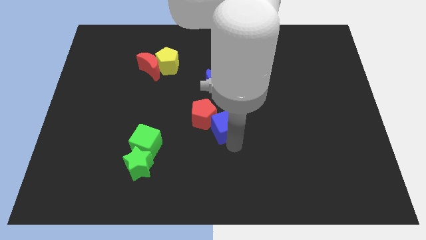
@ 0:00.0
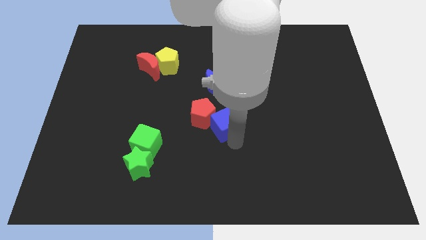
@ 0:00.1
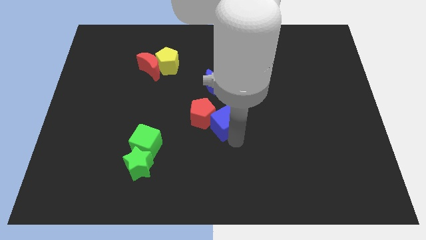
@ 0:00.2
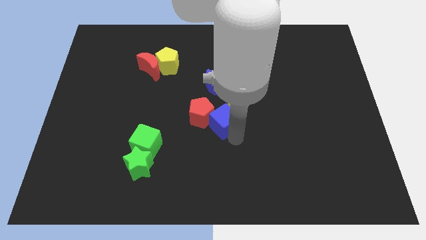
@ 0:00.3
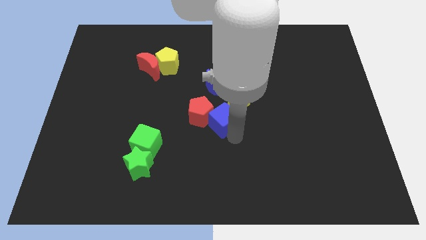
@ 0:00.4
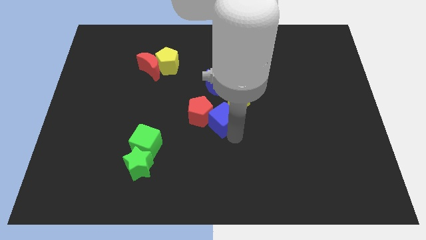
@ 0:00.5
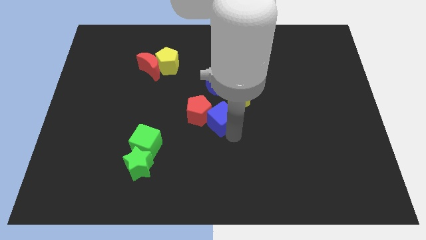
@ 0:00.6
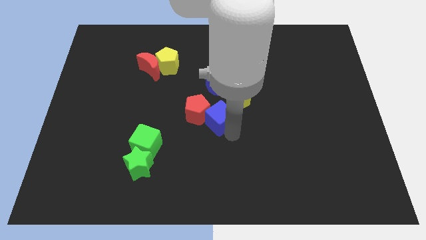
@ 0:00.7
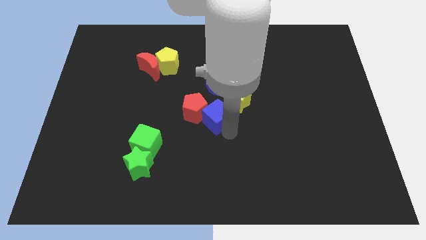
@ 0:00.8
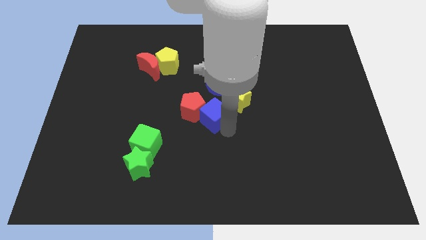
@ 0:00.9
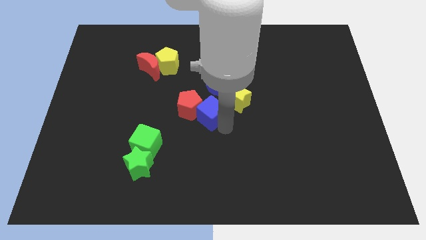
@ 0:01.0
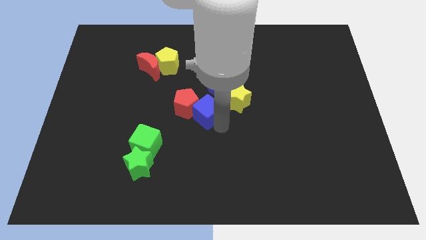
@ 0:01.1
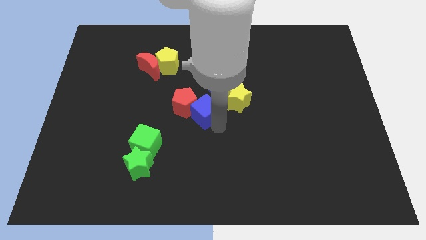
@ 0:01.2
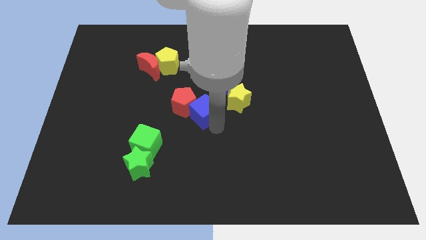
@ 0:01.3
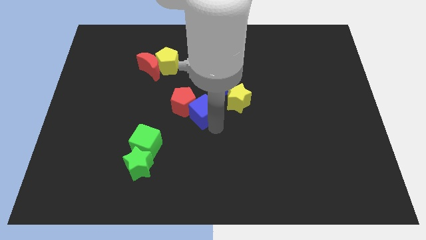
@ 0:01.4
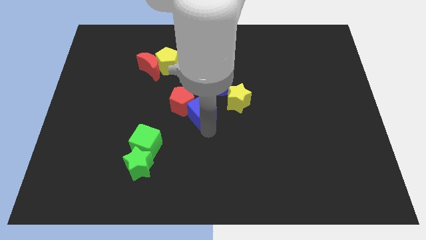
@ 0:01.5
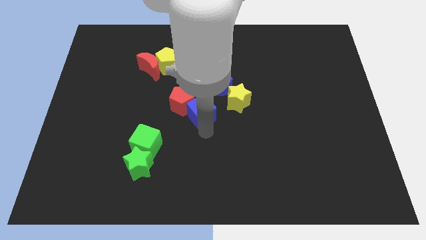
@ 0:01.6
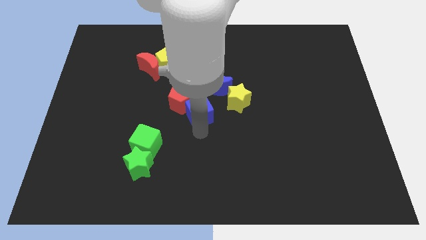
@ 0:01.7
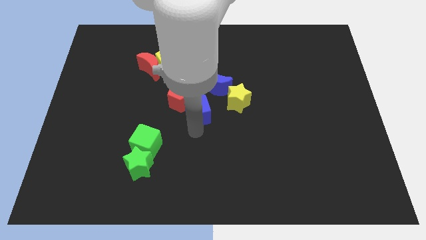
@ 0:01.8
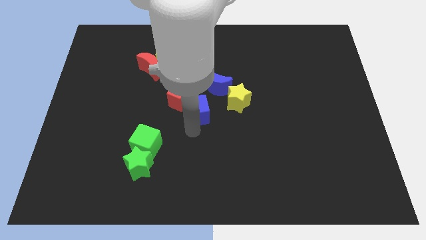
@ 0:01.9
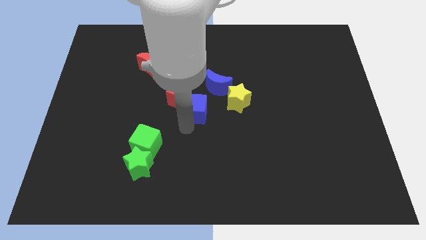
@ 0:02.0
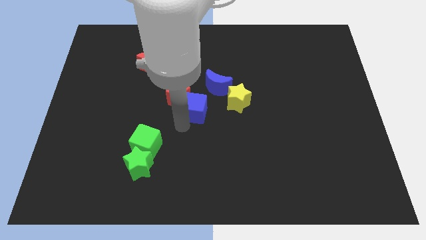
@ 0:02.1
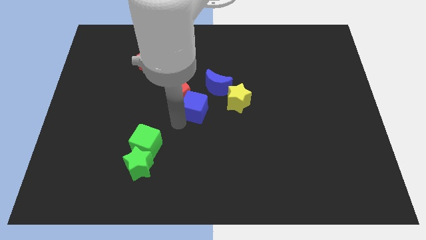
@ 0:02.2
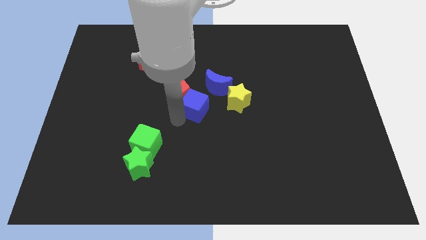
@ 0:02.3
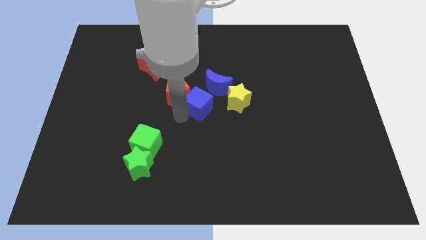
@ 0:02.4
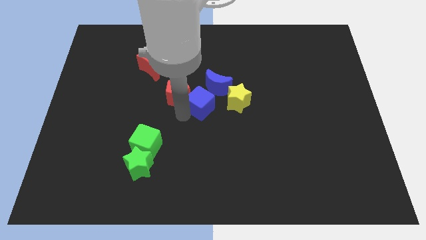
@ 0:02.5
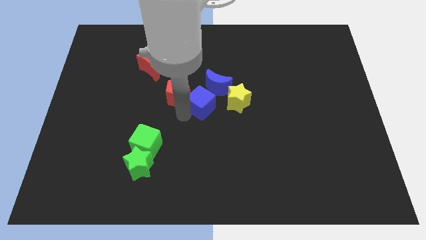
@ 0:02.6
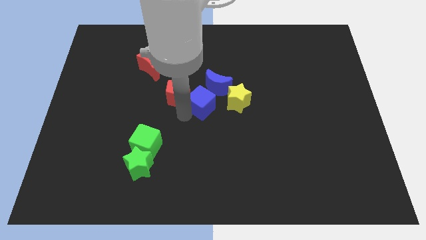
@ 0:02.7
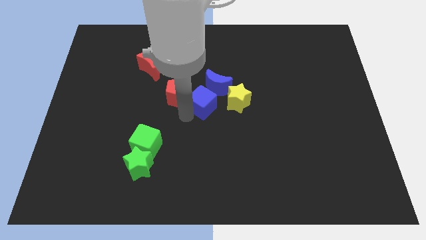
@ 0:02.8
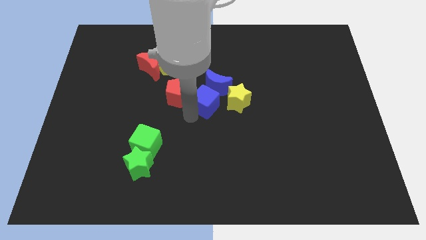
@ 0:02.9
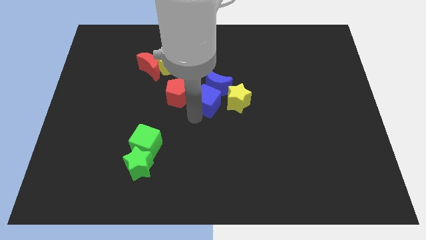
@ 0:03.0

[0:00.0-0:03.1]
push the red pentagon and blue cube towards center

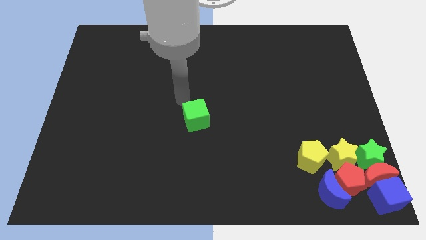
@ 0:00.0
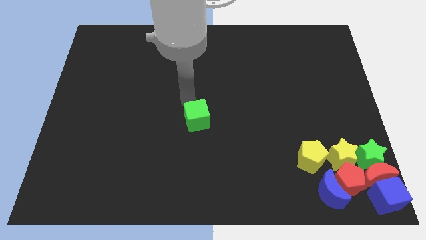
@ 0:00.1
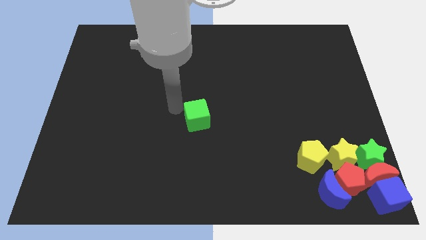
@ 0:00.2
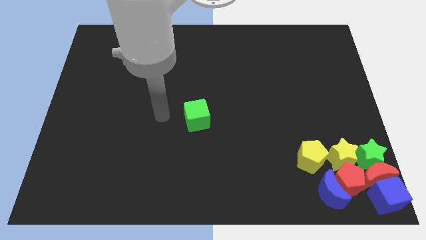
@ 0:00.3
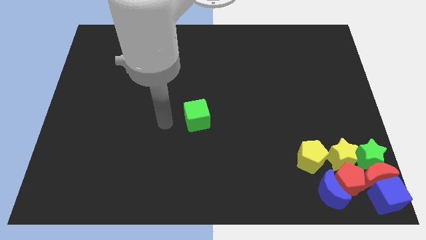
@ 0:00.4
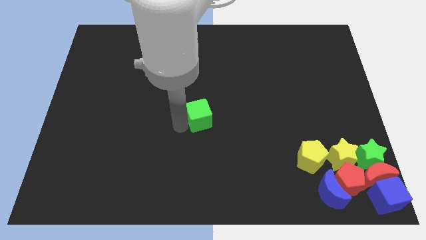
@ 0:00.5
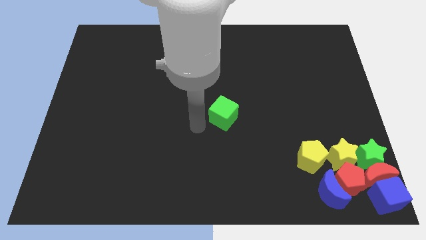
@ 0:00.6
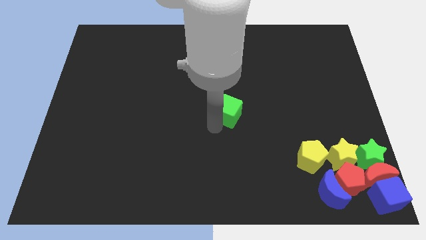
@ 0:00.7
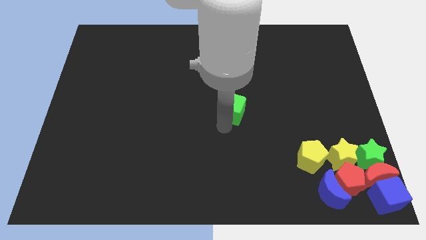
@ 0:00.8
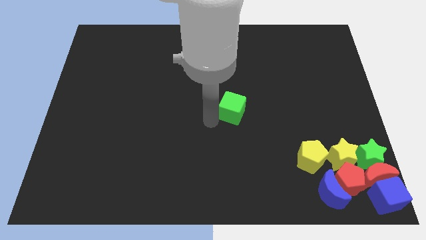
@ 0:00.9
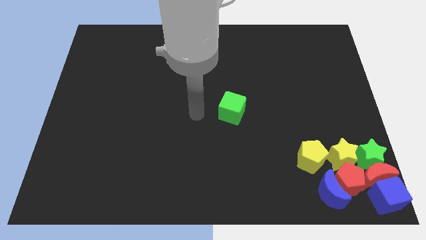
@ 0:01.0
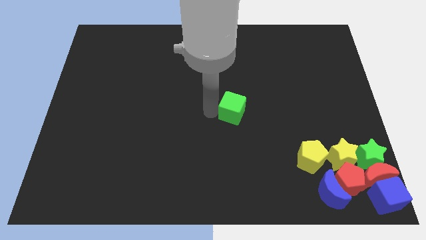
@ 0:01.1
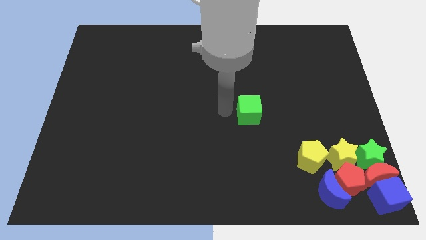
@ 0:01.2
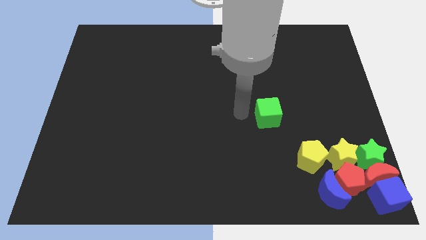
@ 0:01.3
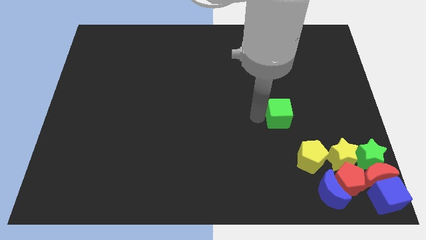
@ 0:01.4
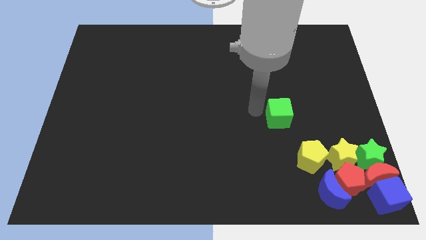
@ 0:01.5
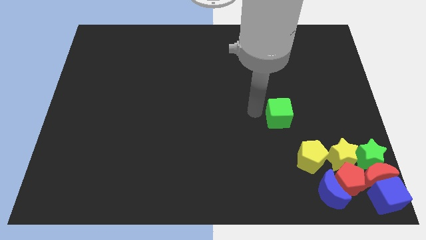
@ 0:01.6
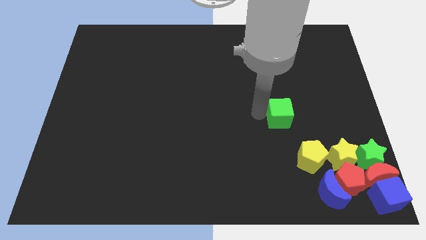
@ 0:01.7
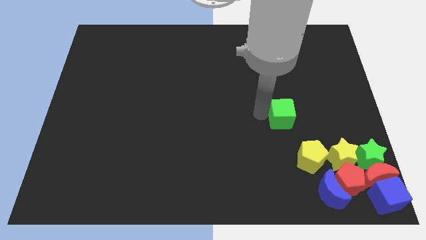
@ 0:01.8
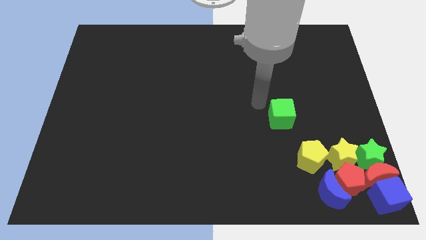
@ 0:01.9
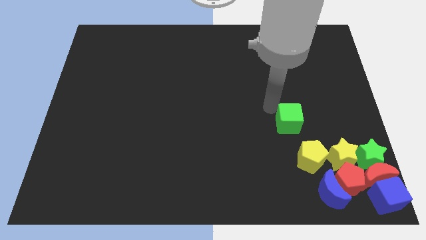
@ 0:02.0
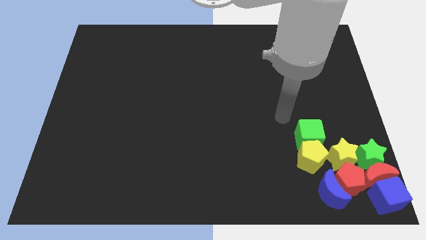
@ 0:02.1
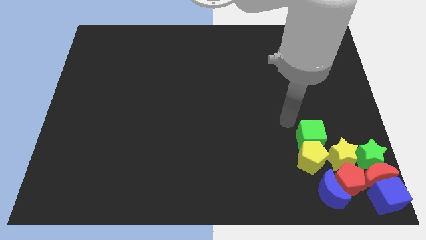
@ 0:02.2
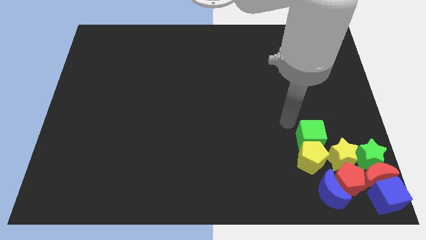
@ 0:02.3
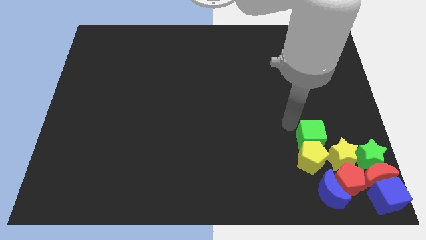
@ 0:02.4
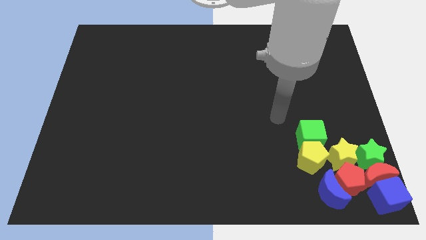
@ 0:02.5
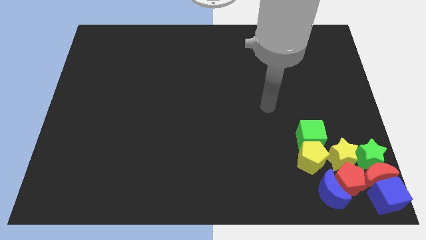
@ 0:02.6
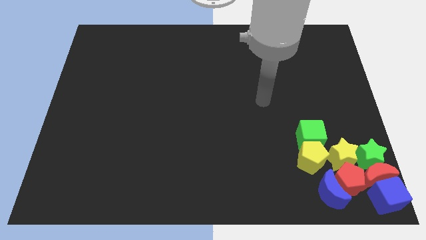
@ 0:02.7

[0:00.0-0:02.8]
make a group of blocks on the bottom right corner of the board

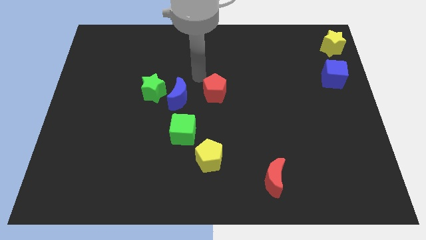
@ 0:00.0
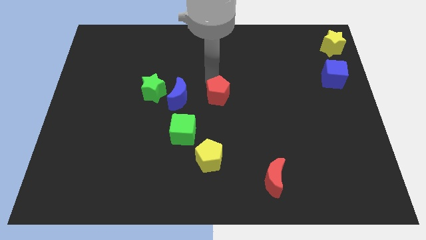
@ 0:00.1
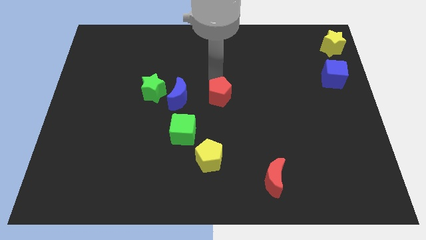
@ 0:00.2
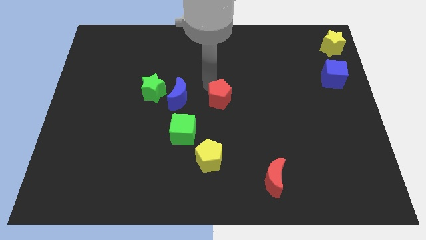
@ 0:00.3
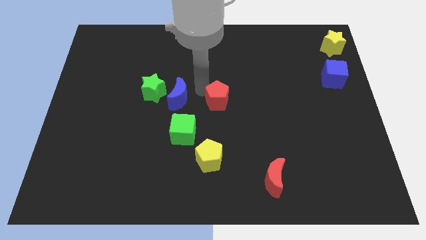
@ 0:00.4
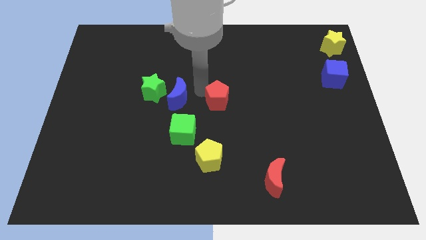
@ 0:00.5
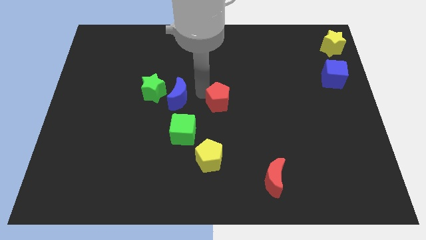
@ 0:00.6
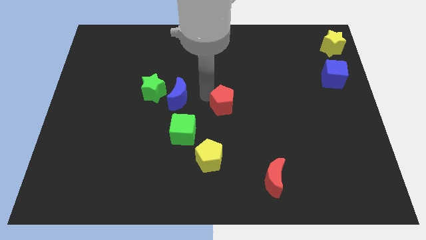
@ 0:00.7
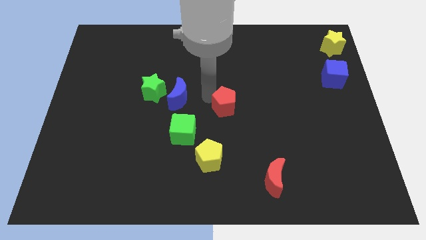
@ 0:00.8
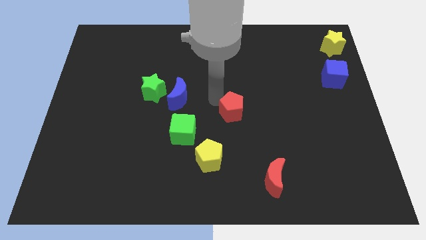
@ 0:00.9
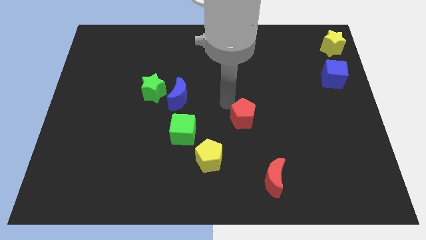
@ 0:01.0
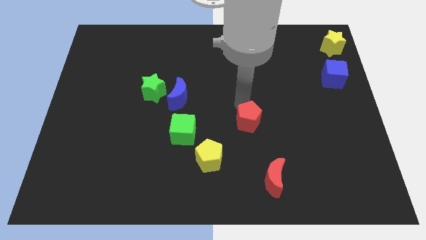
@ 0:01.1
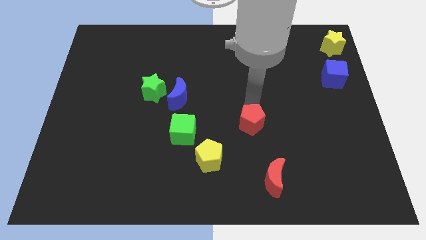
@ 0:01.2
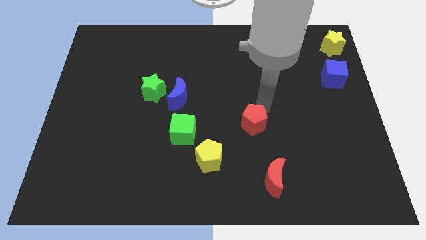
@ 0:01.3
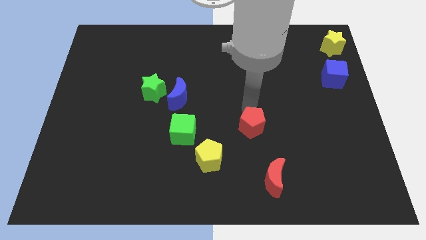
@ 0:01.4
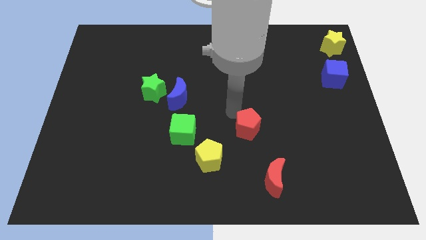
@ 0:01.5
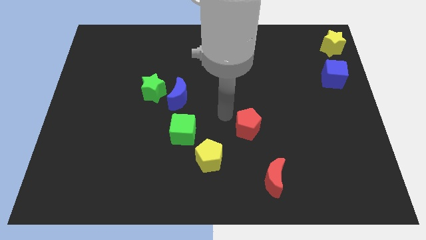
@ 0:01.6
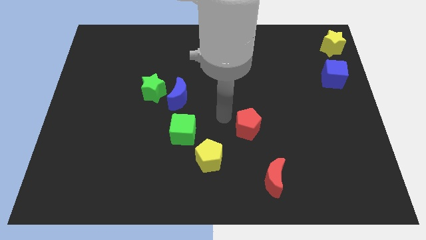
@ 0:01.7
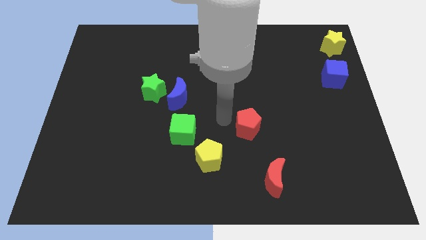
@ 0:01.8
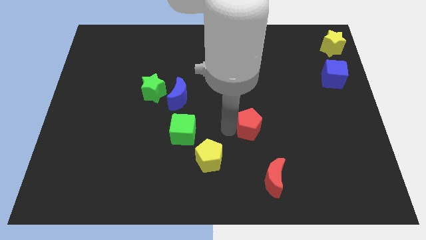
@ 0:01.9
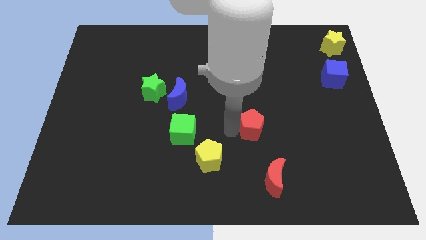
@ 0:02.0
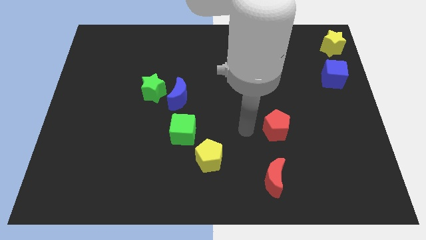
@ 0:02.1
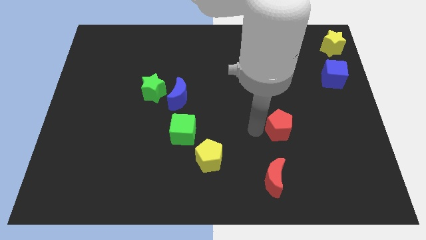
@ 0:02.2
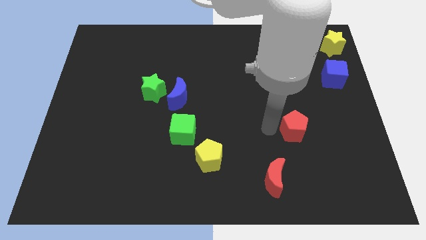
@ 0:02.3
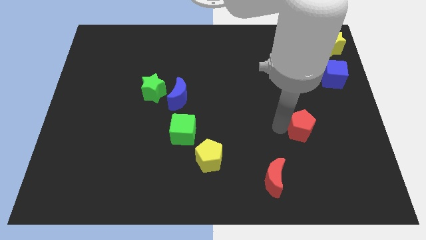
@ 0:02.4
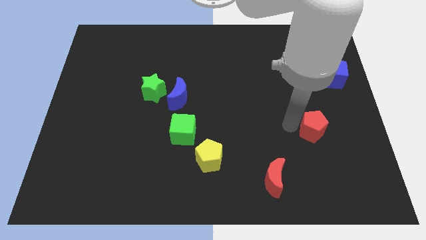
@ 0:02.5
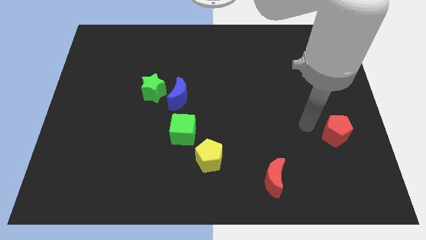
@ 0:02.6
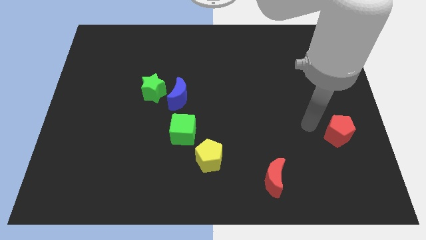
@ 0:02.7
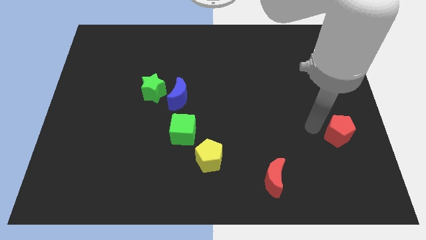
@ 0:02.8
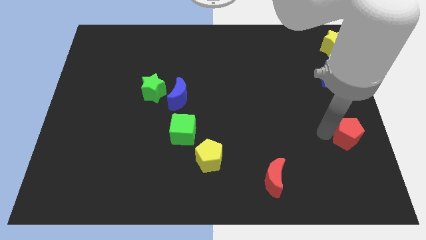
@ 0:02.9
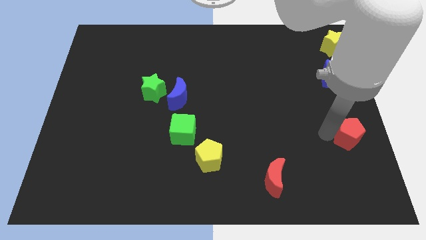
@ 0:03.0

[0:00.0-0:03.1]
place red pentagon to the bottom of blue cube
